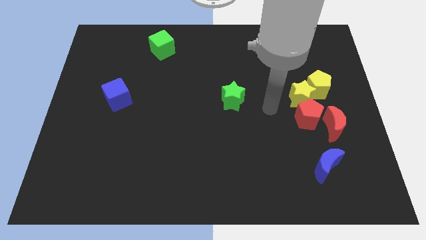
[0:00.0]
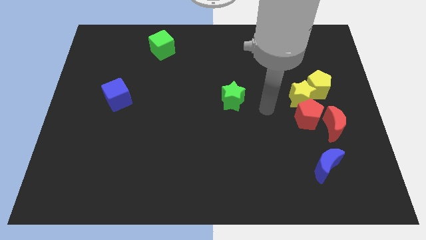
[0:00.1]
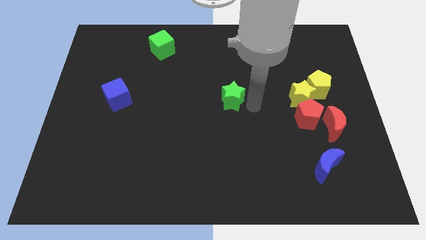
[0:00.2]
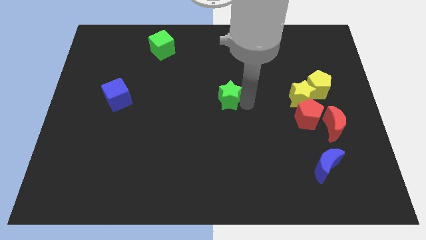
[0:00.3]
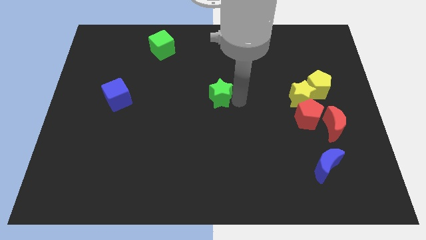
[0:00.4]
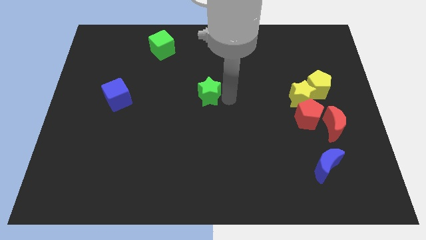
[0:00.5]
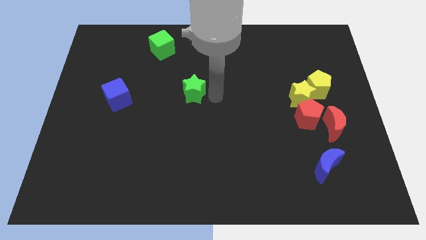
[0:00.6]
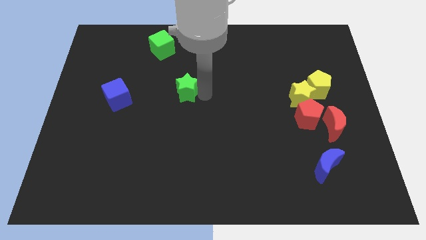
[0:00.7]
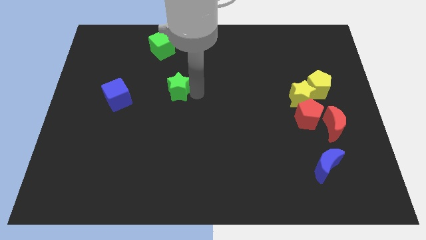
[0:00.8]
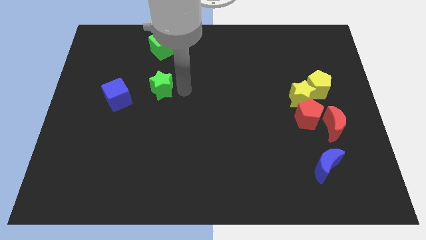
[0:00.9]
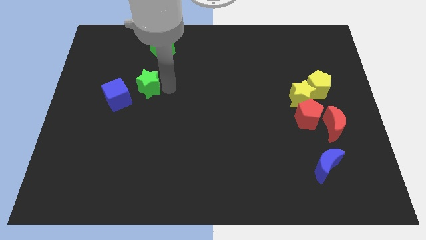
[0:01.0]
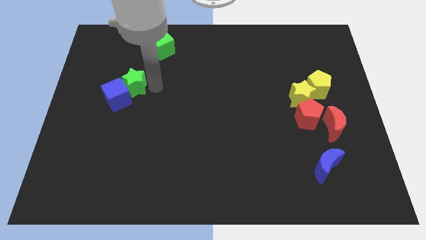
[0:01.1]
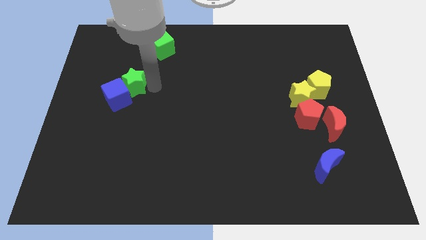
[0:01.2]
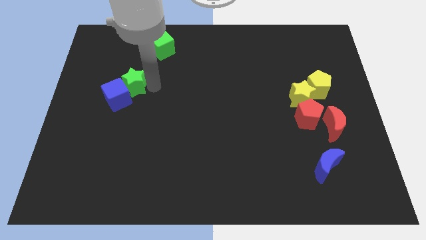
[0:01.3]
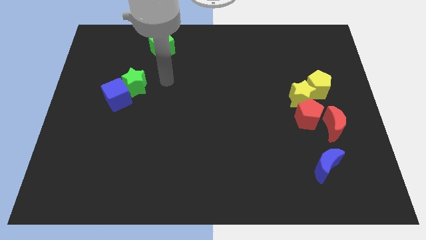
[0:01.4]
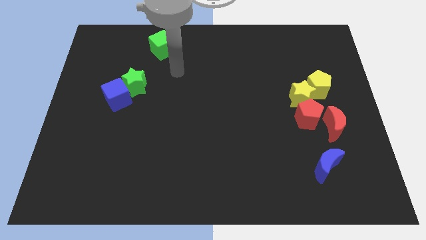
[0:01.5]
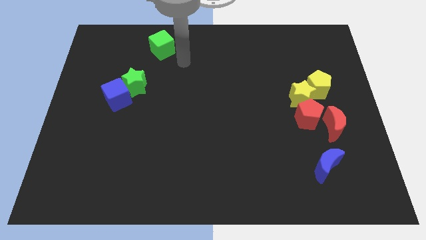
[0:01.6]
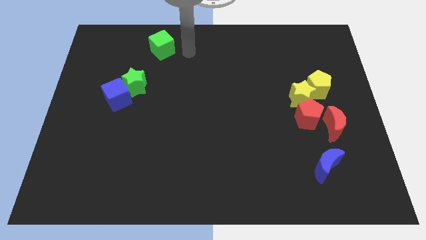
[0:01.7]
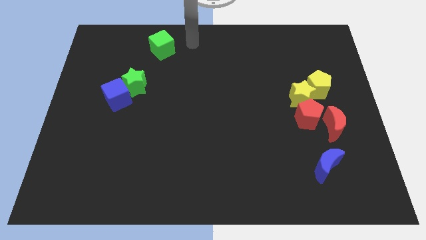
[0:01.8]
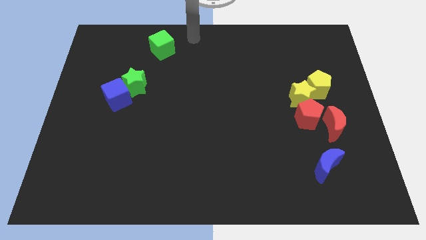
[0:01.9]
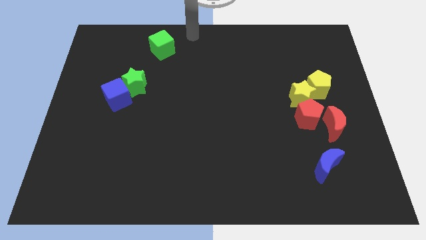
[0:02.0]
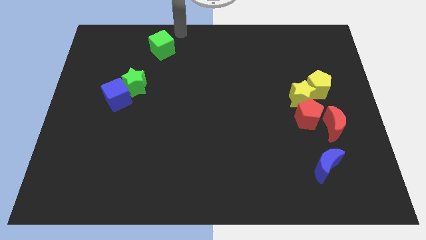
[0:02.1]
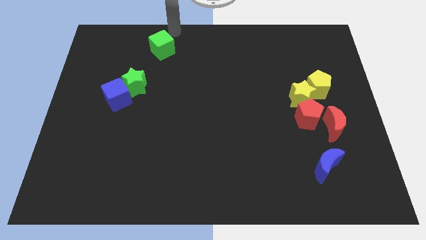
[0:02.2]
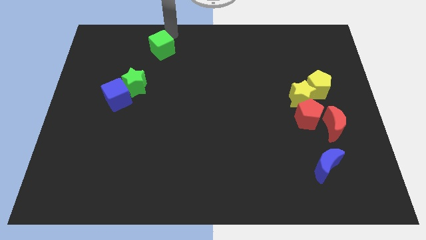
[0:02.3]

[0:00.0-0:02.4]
move the green star to the right of the blue cube

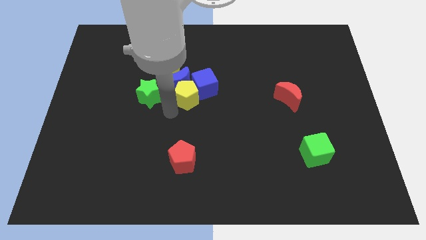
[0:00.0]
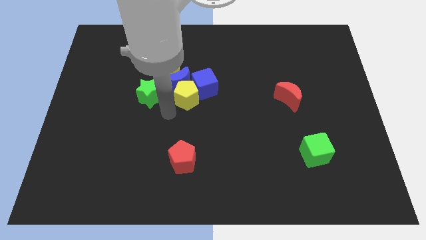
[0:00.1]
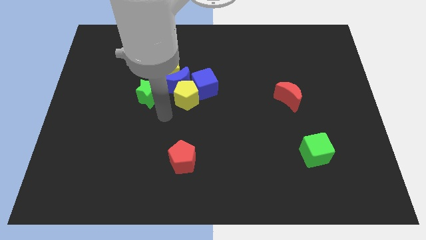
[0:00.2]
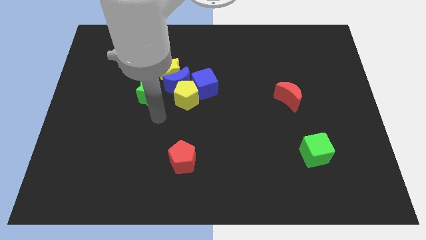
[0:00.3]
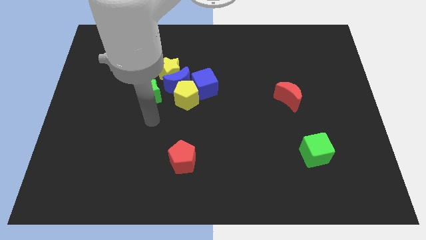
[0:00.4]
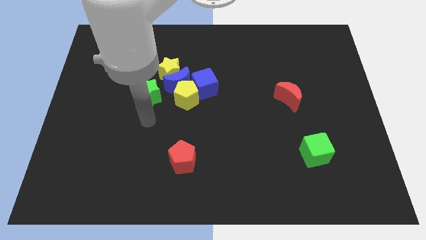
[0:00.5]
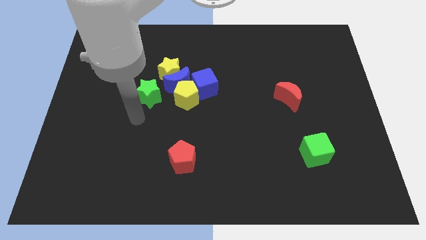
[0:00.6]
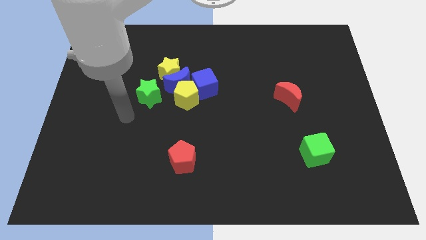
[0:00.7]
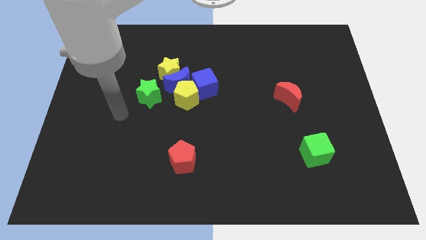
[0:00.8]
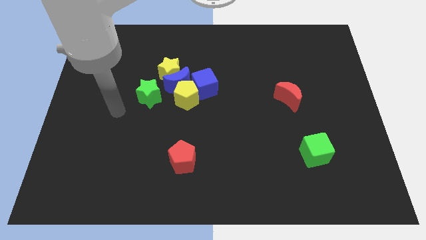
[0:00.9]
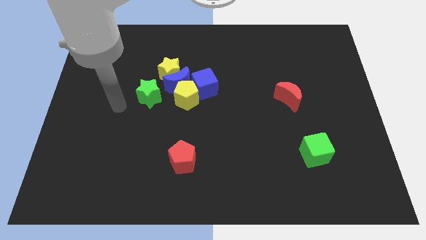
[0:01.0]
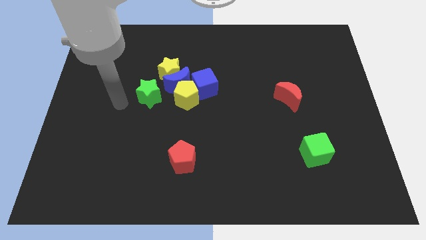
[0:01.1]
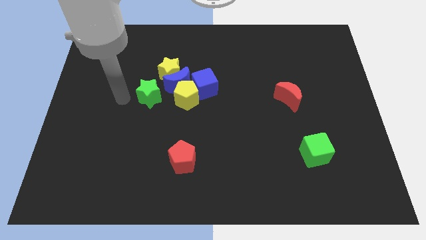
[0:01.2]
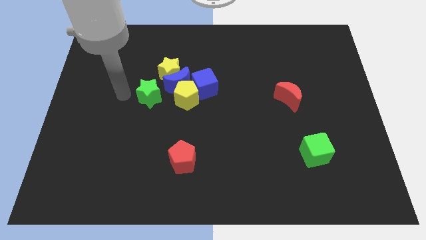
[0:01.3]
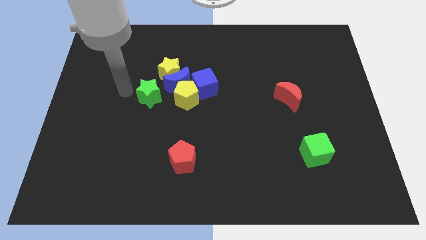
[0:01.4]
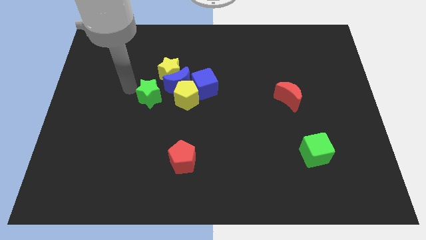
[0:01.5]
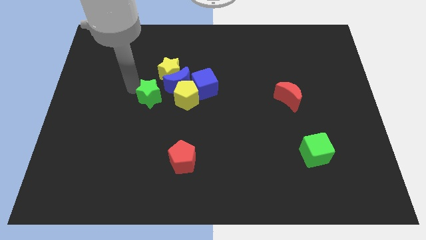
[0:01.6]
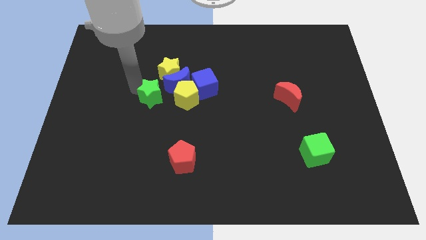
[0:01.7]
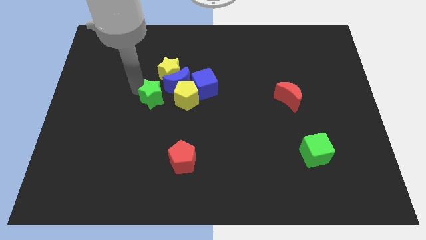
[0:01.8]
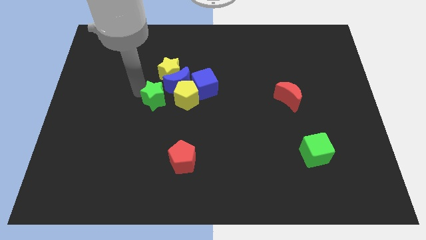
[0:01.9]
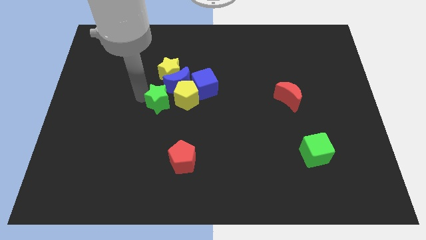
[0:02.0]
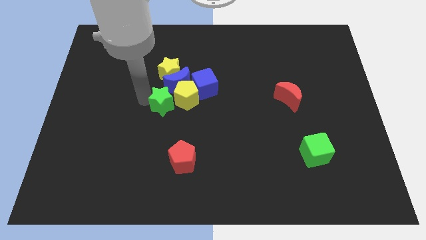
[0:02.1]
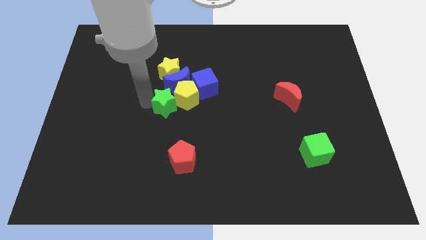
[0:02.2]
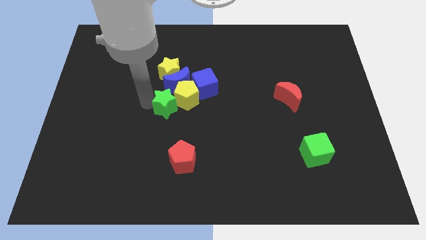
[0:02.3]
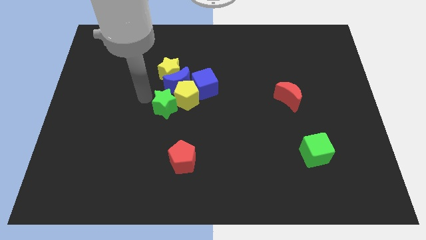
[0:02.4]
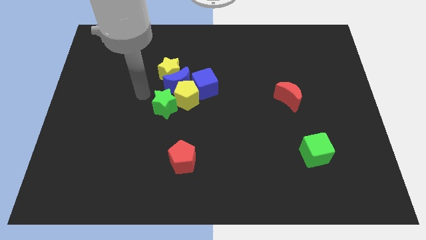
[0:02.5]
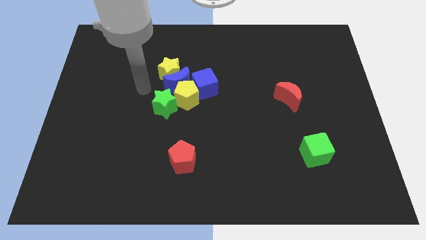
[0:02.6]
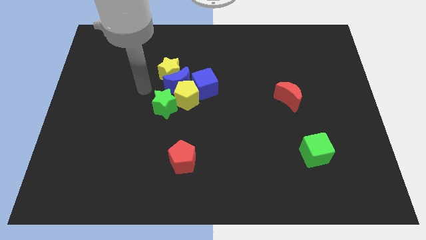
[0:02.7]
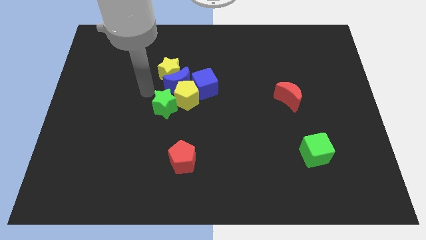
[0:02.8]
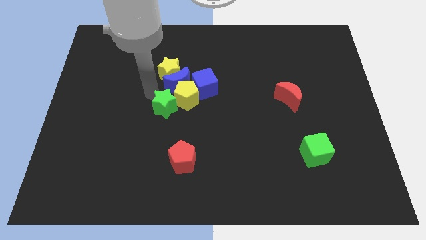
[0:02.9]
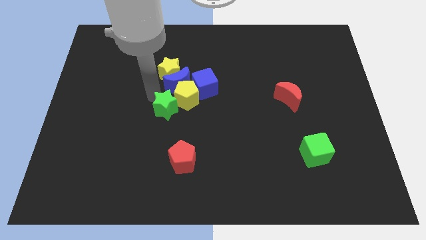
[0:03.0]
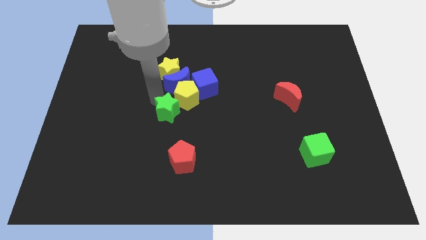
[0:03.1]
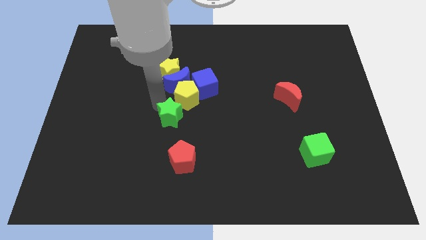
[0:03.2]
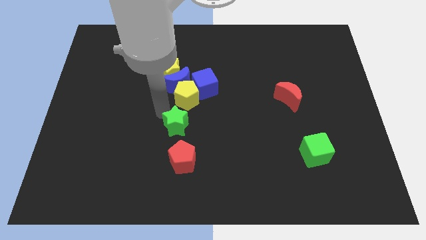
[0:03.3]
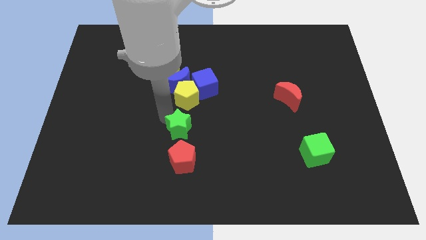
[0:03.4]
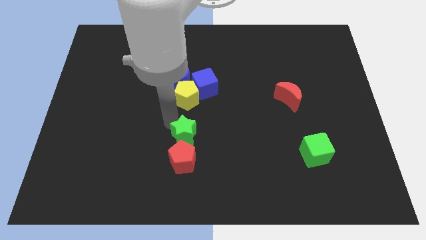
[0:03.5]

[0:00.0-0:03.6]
place green star to the top of red pentagon

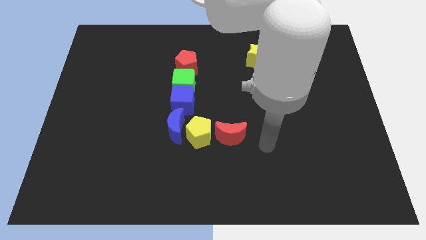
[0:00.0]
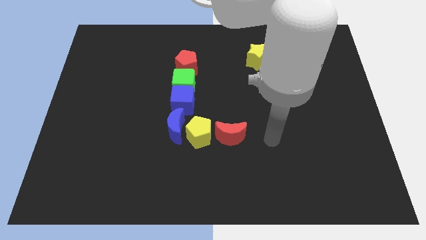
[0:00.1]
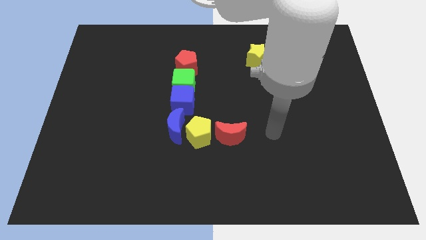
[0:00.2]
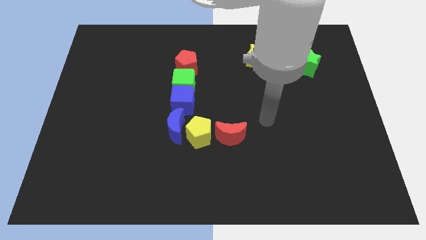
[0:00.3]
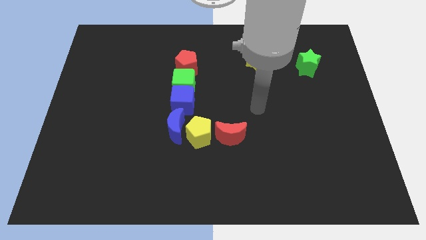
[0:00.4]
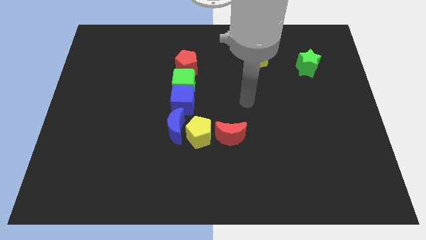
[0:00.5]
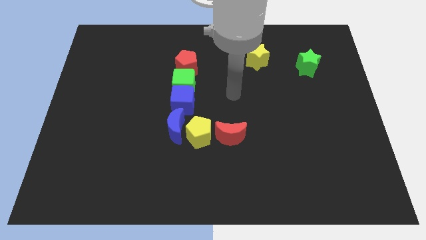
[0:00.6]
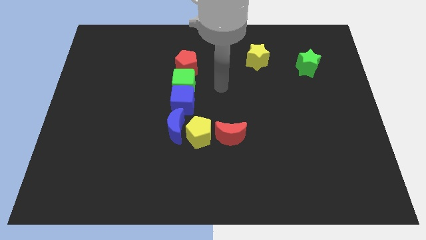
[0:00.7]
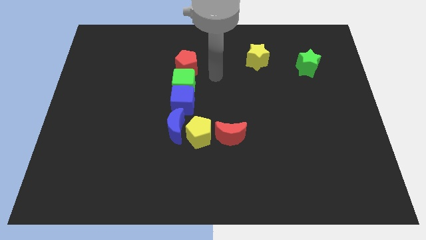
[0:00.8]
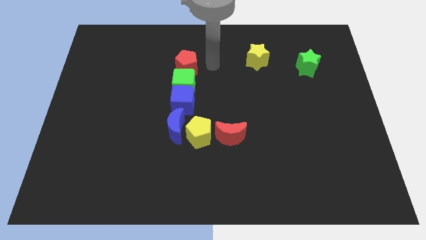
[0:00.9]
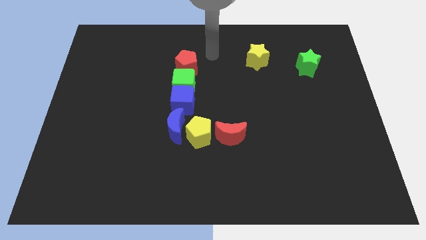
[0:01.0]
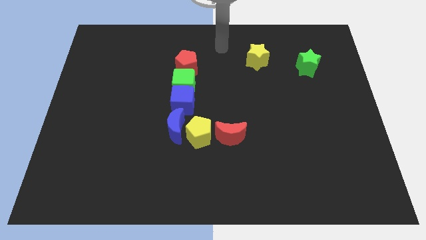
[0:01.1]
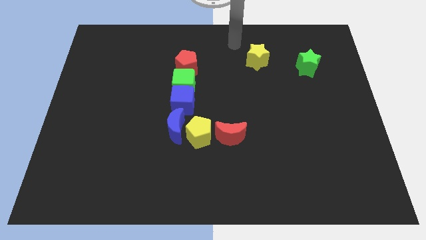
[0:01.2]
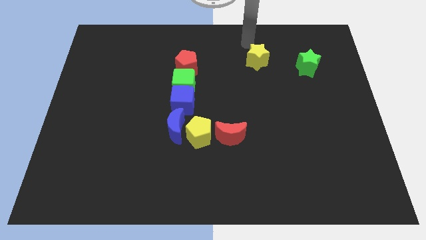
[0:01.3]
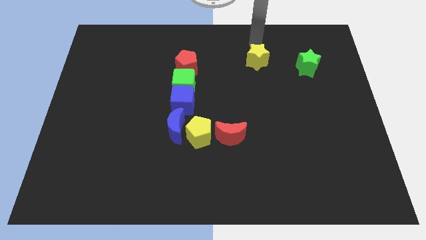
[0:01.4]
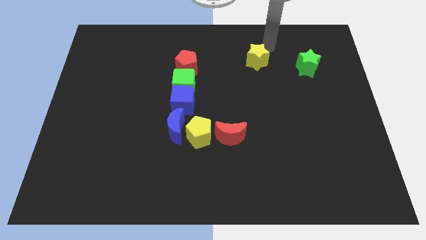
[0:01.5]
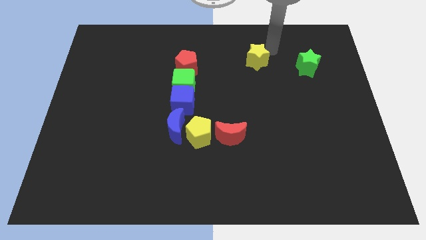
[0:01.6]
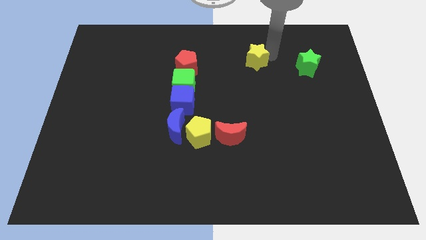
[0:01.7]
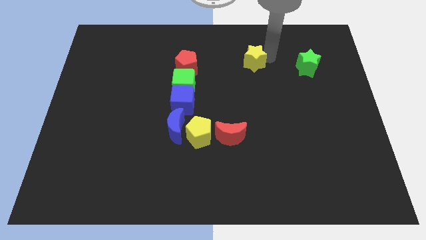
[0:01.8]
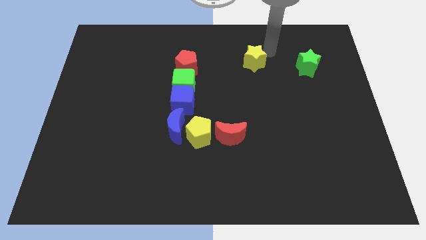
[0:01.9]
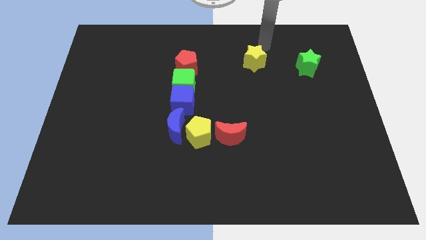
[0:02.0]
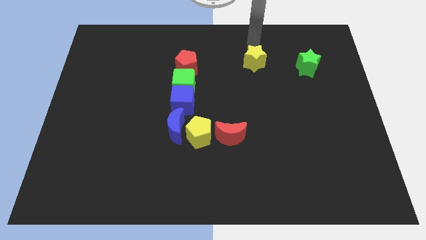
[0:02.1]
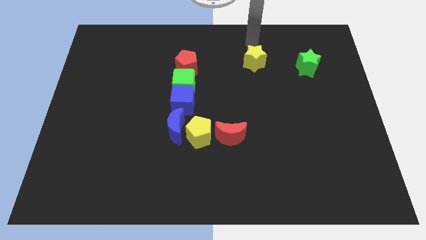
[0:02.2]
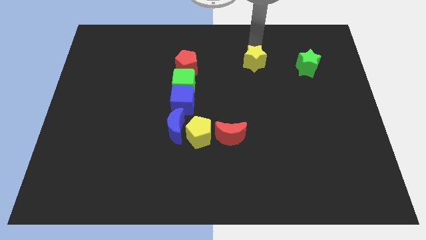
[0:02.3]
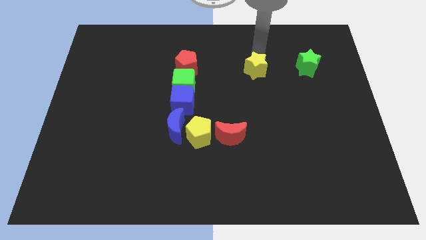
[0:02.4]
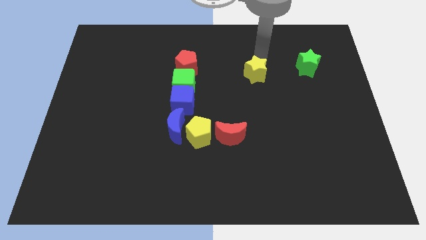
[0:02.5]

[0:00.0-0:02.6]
place yellow star to the right of red pentagon

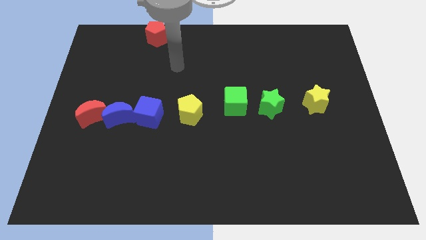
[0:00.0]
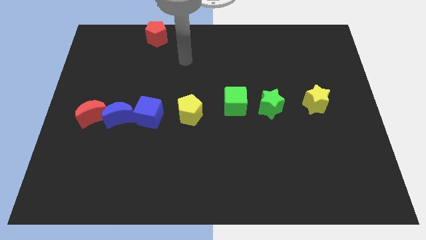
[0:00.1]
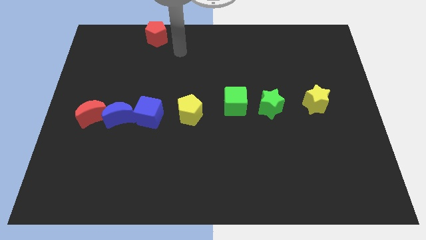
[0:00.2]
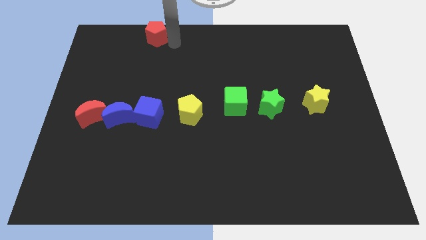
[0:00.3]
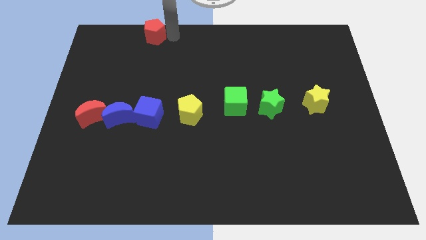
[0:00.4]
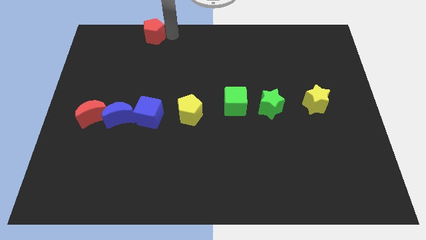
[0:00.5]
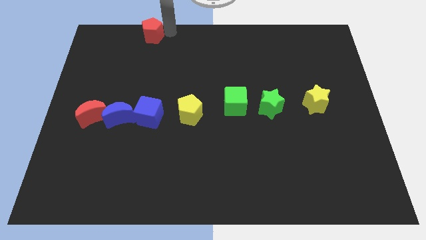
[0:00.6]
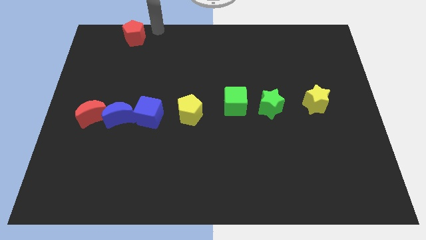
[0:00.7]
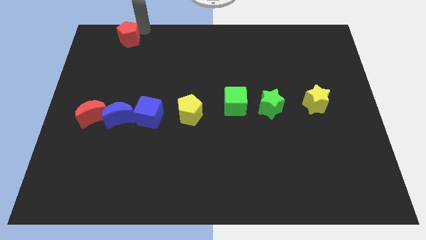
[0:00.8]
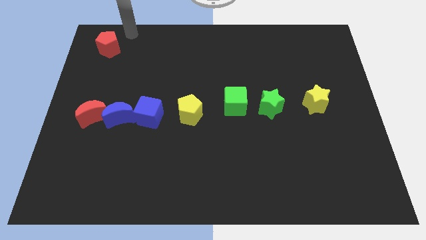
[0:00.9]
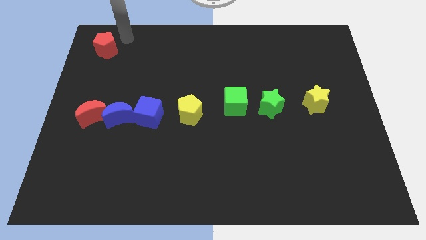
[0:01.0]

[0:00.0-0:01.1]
move the red pentagon to the top left
